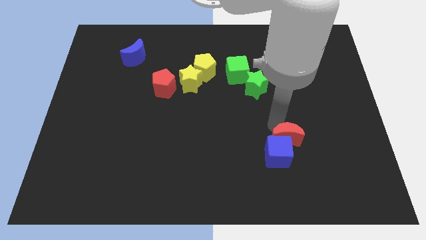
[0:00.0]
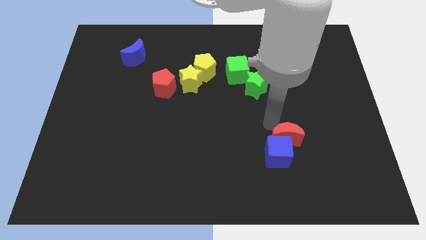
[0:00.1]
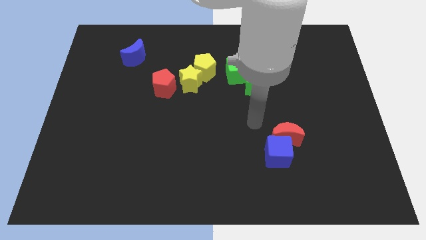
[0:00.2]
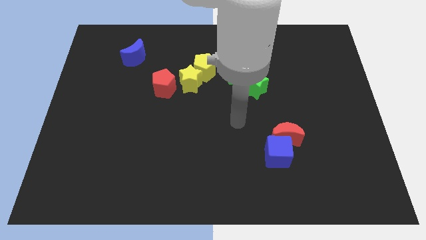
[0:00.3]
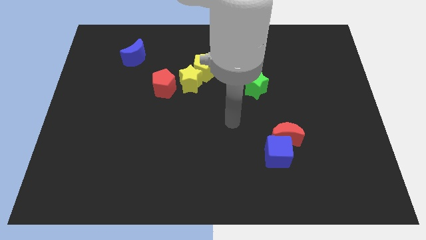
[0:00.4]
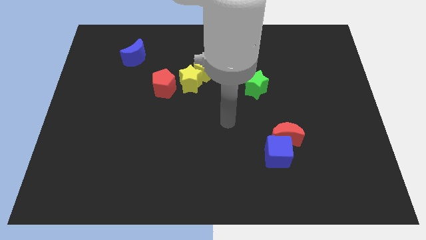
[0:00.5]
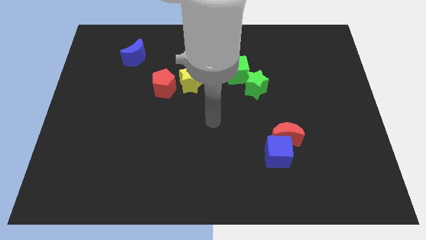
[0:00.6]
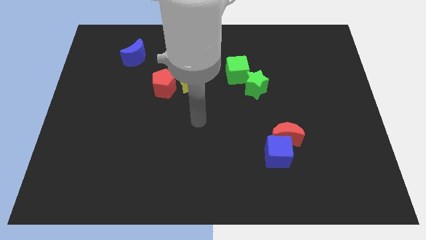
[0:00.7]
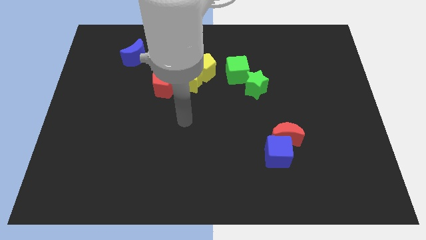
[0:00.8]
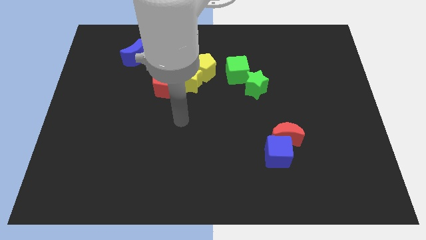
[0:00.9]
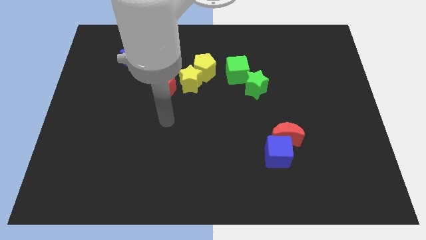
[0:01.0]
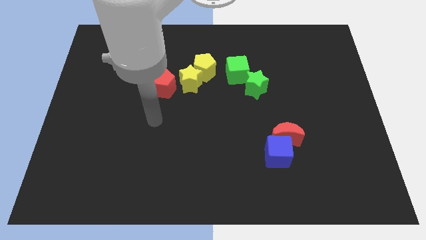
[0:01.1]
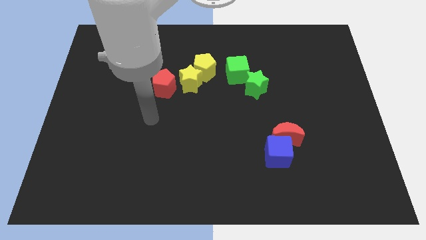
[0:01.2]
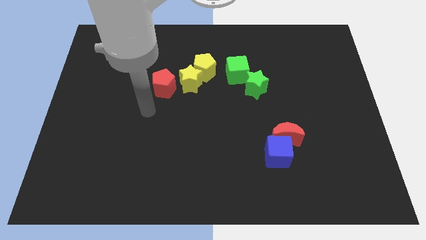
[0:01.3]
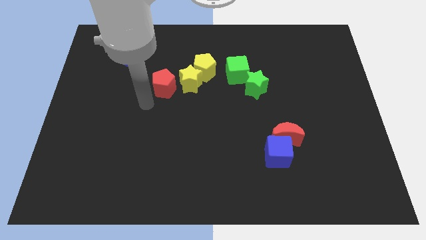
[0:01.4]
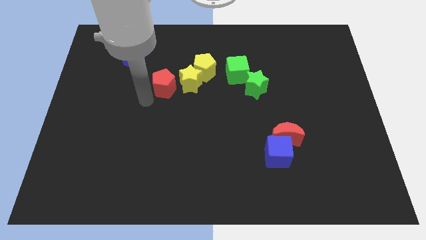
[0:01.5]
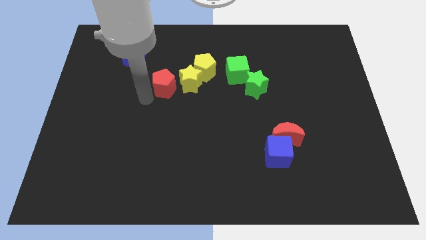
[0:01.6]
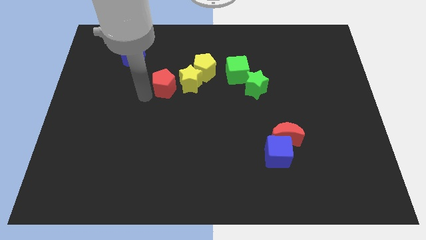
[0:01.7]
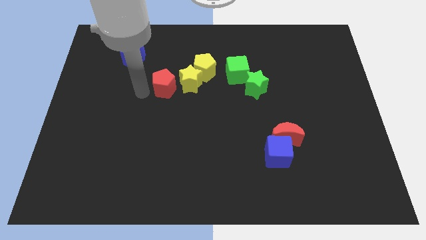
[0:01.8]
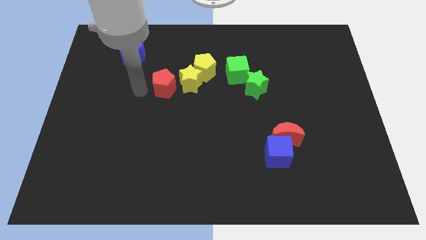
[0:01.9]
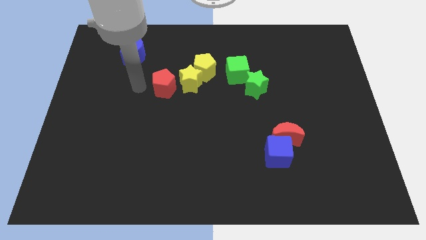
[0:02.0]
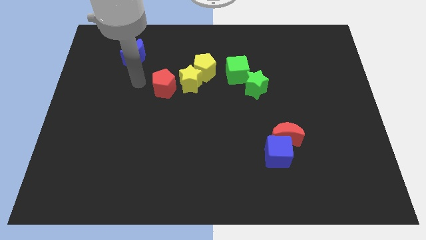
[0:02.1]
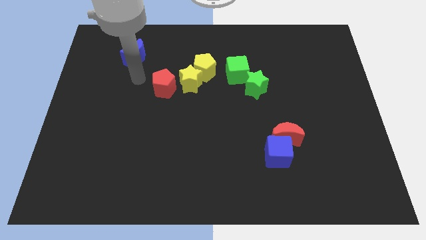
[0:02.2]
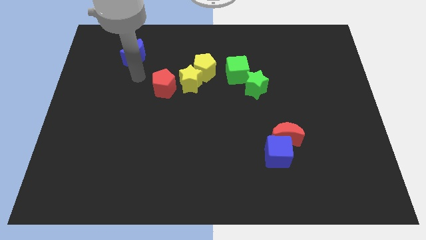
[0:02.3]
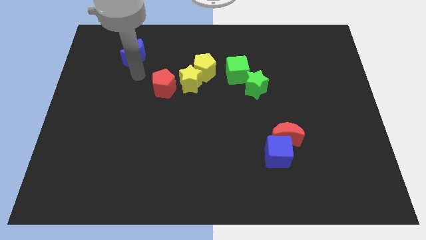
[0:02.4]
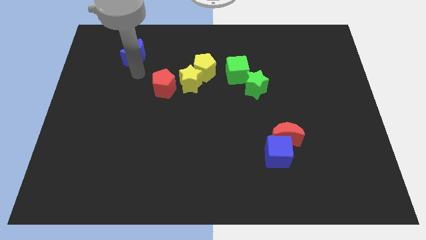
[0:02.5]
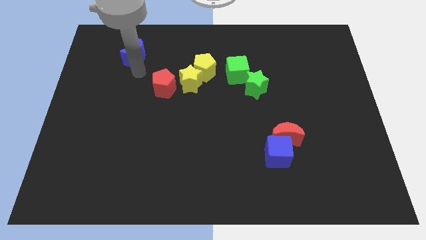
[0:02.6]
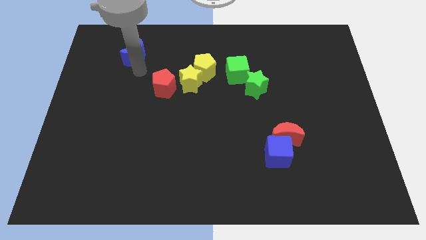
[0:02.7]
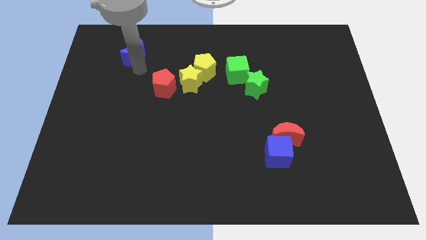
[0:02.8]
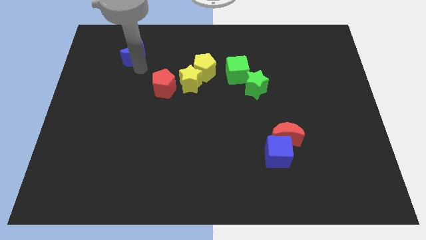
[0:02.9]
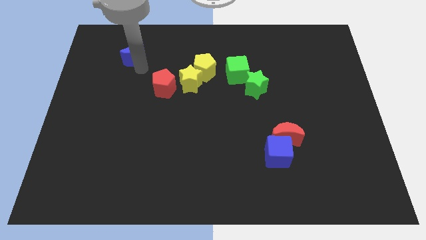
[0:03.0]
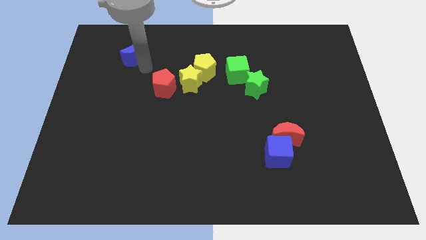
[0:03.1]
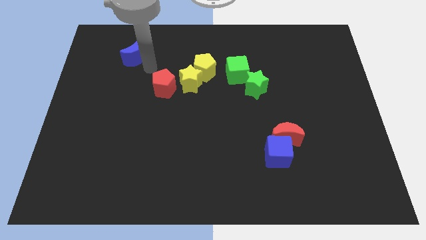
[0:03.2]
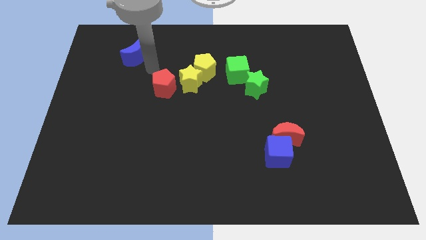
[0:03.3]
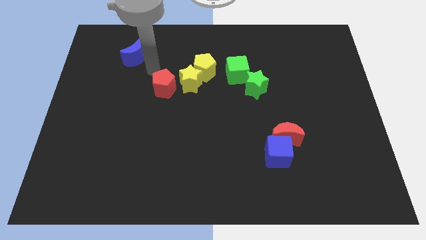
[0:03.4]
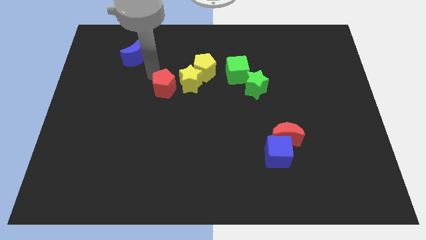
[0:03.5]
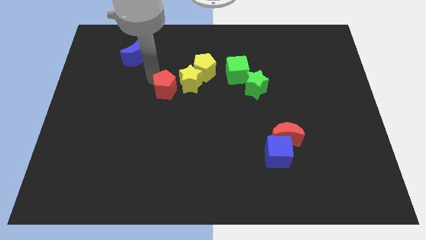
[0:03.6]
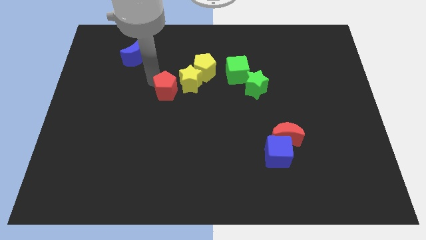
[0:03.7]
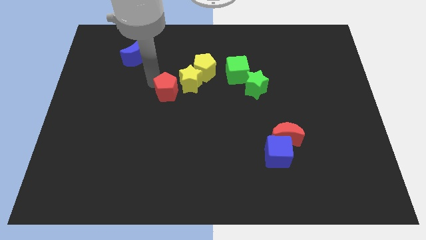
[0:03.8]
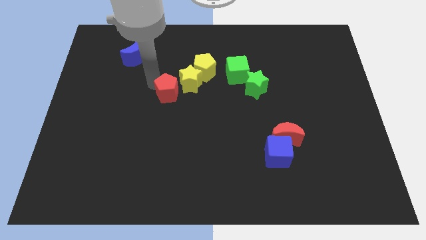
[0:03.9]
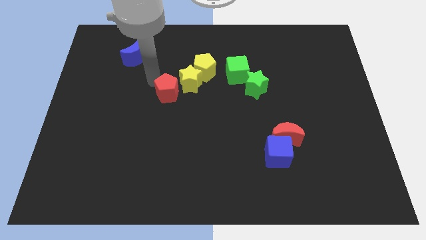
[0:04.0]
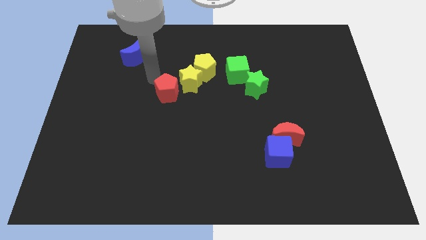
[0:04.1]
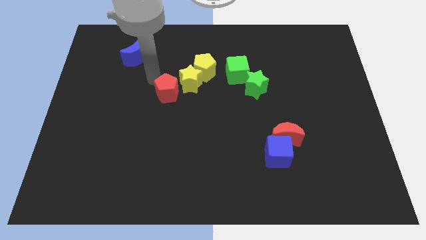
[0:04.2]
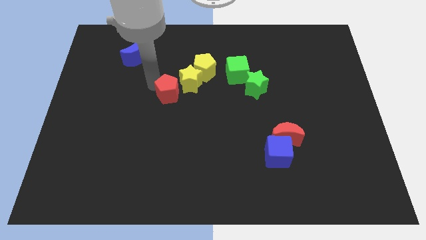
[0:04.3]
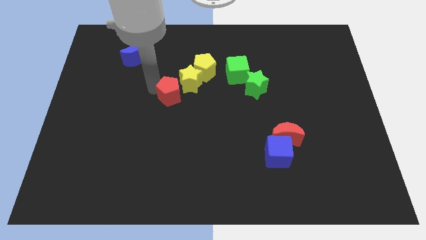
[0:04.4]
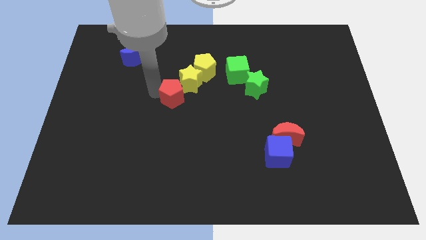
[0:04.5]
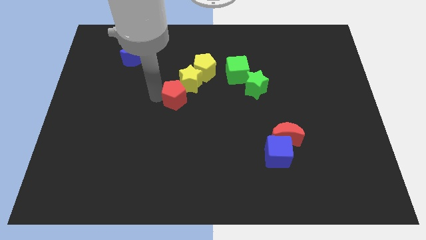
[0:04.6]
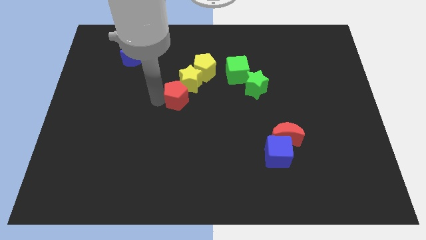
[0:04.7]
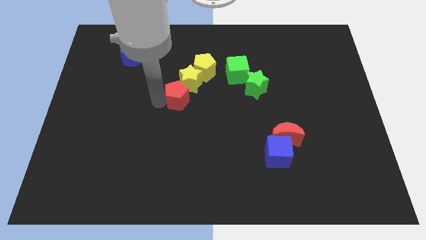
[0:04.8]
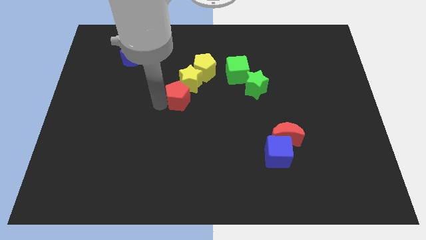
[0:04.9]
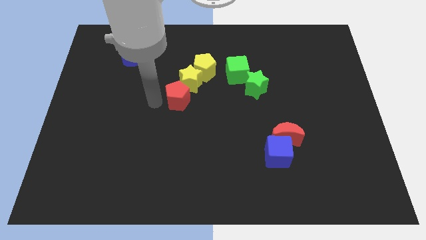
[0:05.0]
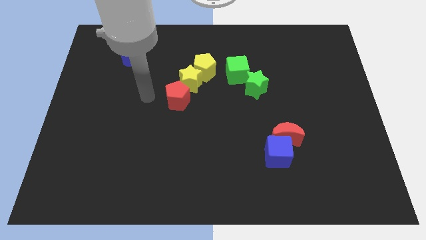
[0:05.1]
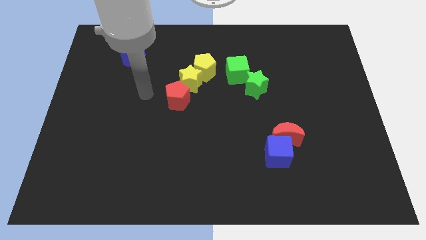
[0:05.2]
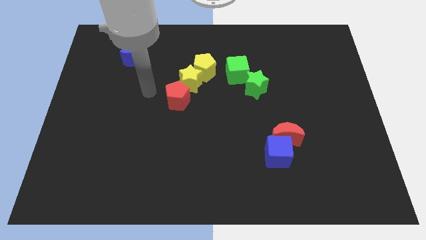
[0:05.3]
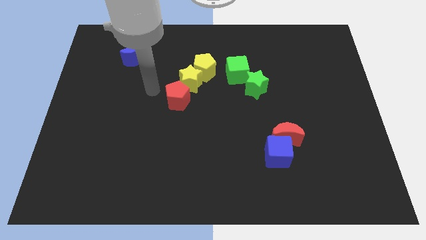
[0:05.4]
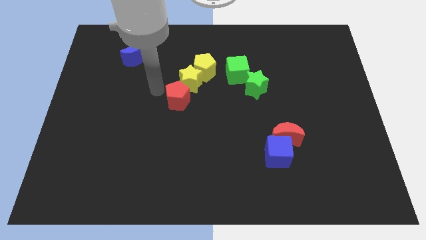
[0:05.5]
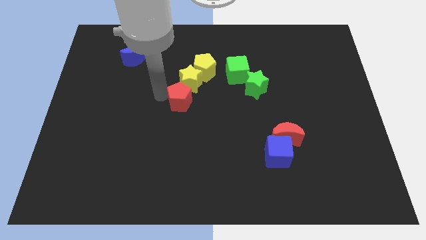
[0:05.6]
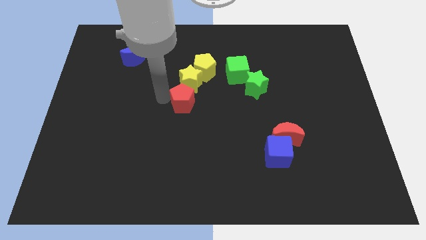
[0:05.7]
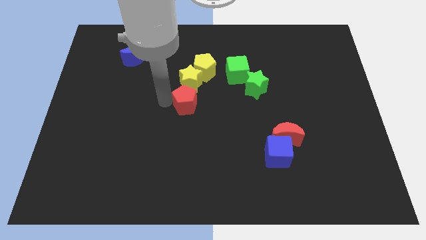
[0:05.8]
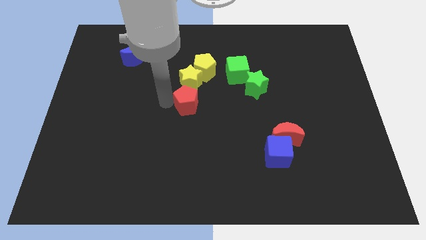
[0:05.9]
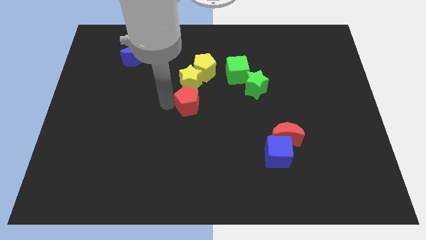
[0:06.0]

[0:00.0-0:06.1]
move the red pentagon to the bottom of the yellow star

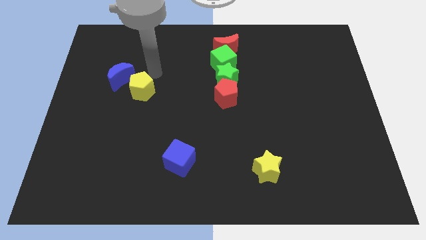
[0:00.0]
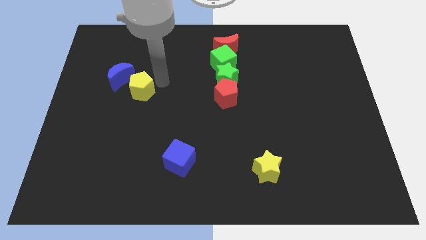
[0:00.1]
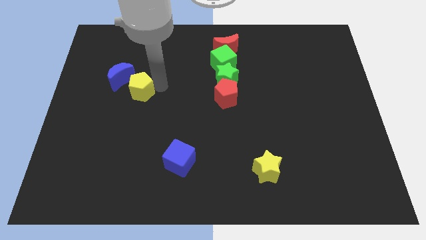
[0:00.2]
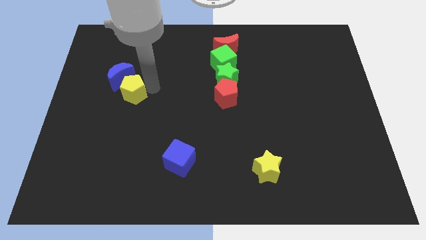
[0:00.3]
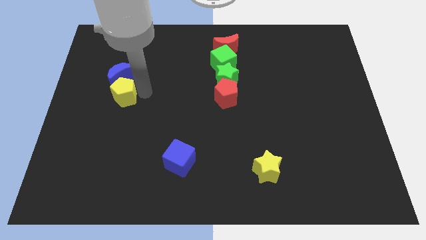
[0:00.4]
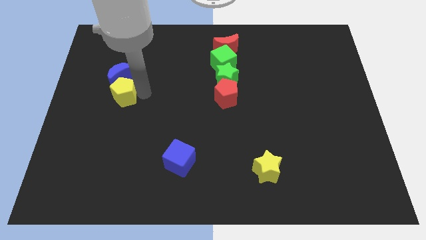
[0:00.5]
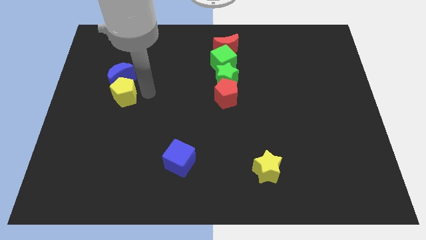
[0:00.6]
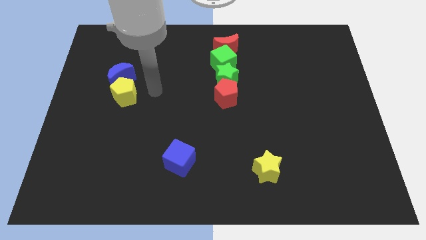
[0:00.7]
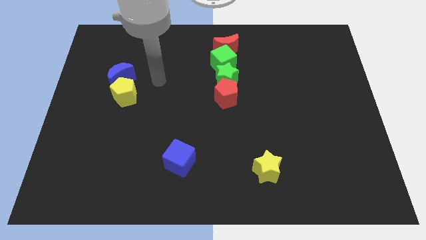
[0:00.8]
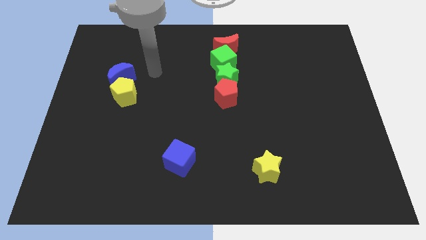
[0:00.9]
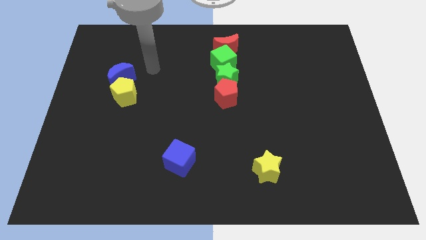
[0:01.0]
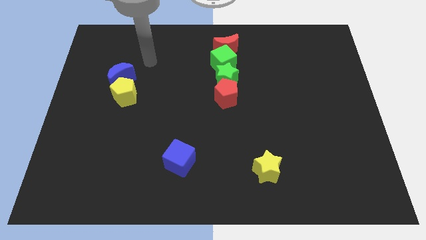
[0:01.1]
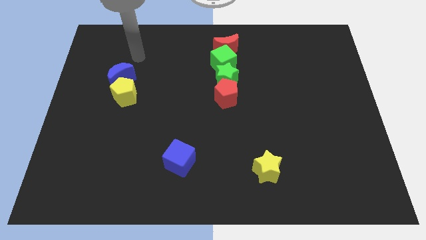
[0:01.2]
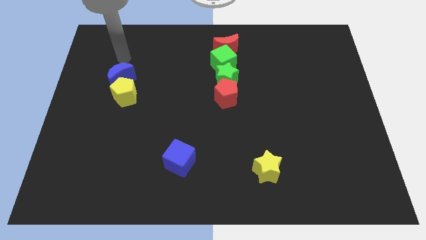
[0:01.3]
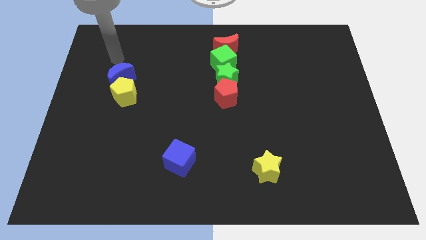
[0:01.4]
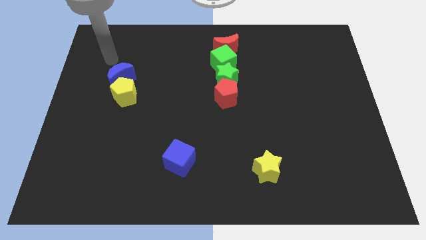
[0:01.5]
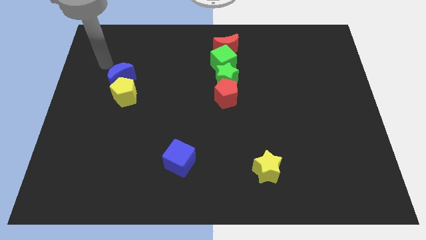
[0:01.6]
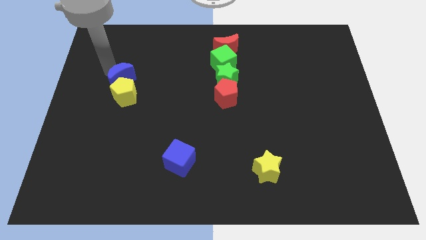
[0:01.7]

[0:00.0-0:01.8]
push the yellow pentagon to the bottom of the blue crescent

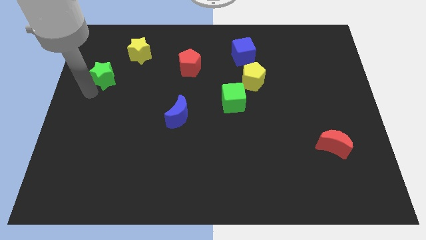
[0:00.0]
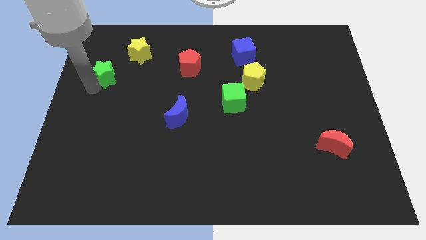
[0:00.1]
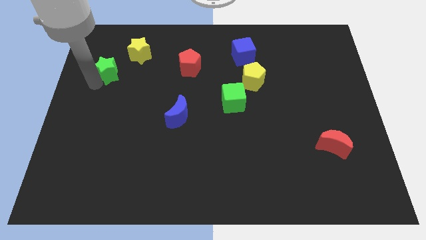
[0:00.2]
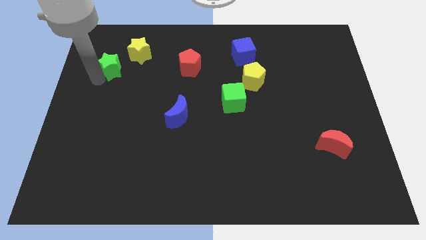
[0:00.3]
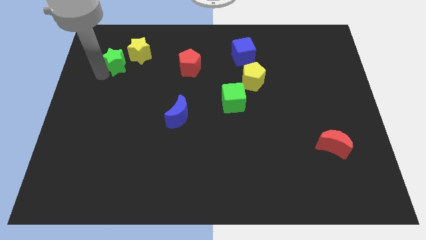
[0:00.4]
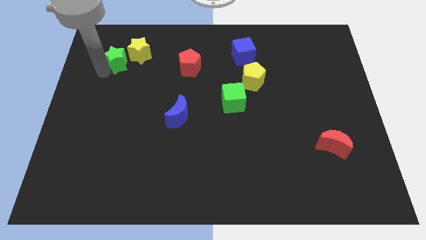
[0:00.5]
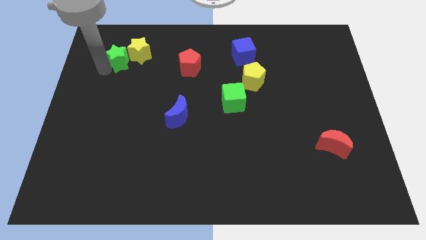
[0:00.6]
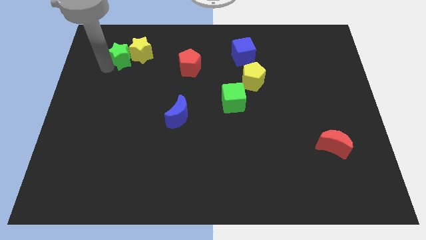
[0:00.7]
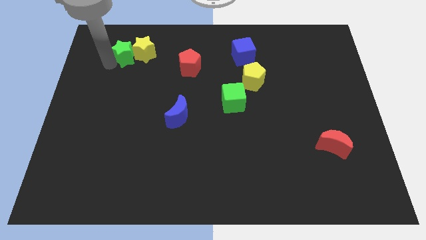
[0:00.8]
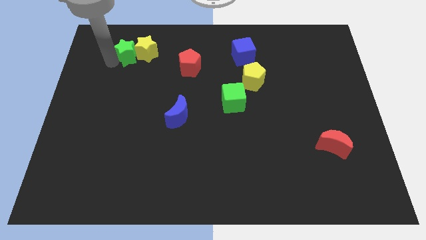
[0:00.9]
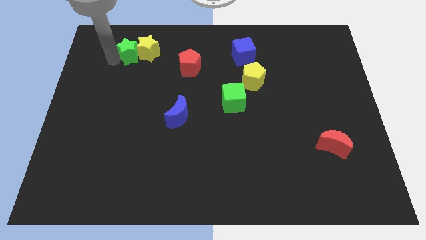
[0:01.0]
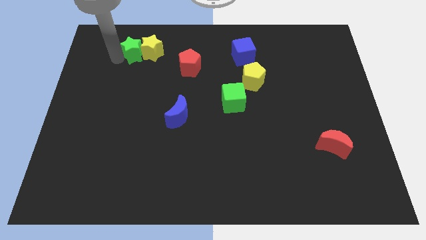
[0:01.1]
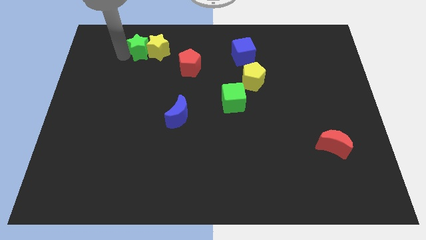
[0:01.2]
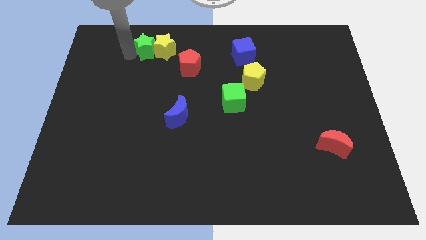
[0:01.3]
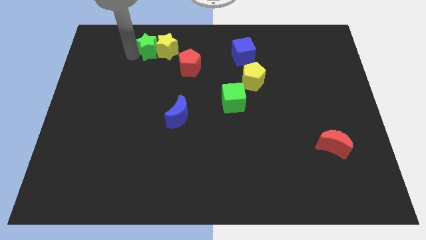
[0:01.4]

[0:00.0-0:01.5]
push the green star into the yellow star
